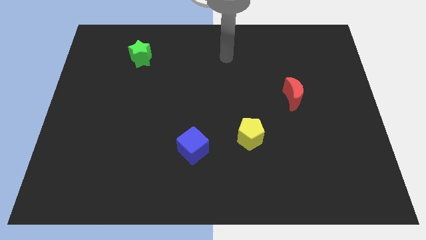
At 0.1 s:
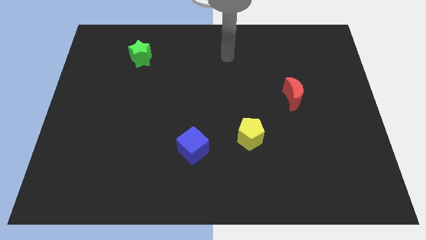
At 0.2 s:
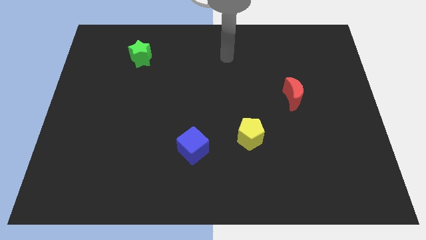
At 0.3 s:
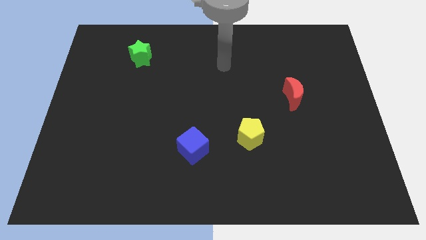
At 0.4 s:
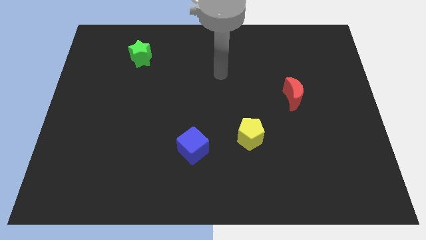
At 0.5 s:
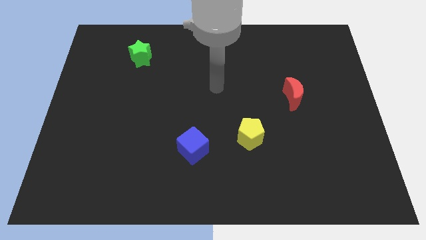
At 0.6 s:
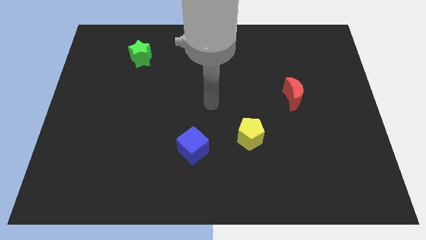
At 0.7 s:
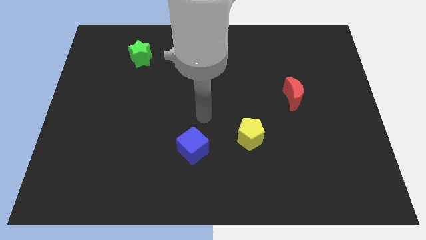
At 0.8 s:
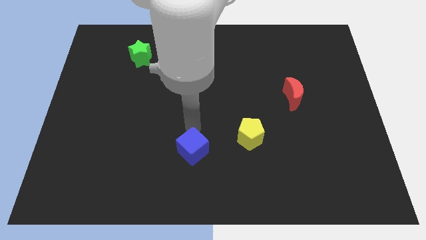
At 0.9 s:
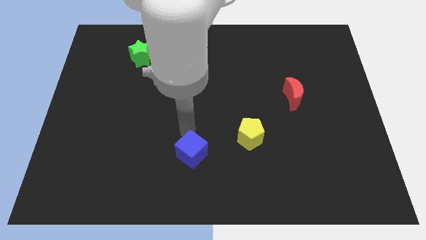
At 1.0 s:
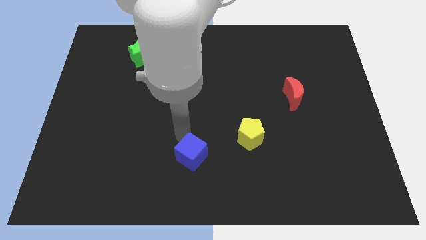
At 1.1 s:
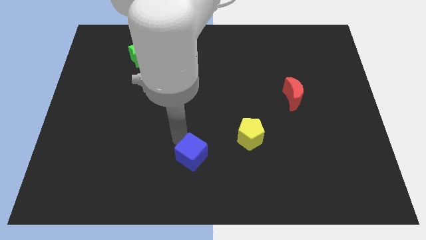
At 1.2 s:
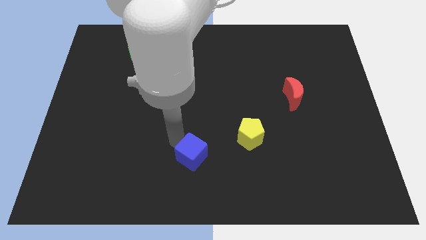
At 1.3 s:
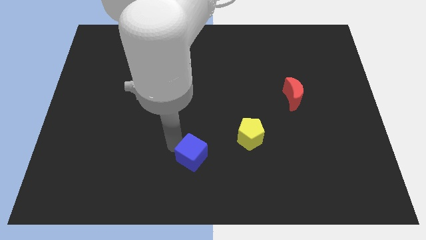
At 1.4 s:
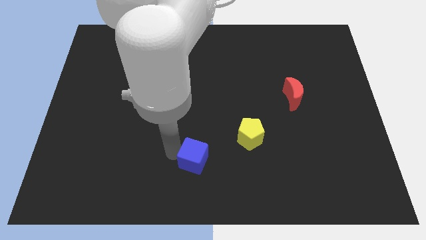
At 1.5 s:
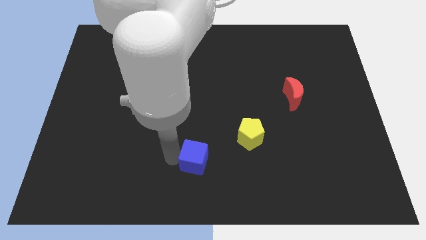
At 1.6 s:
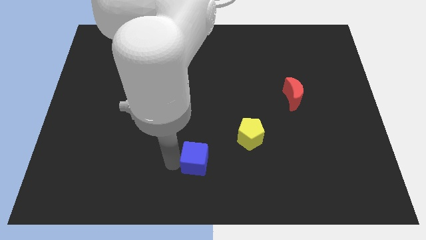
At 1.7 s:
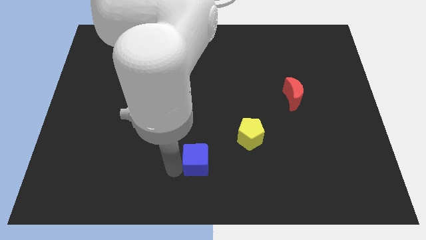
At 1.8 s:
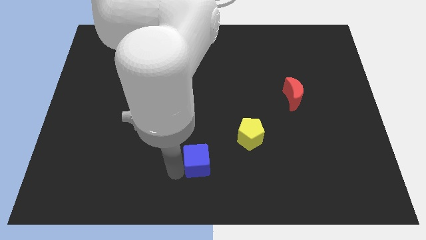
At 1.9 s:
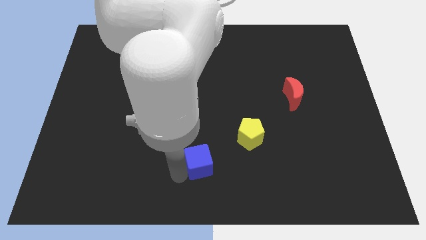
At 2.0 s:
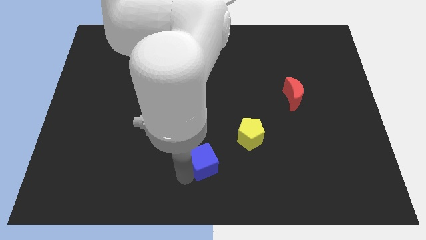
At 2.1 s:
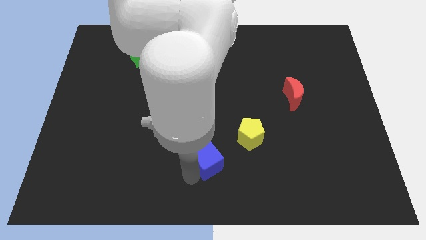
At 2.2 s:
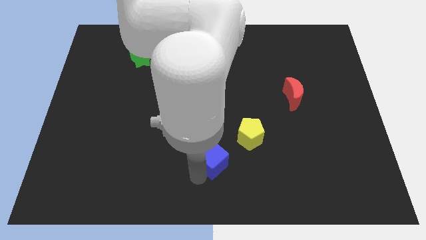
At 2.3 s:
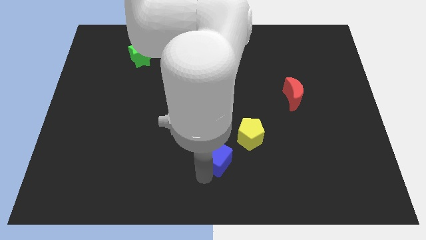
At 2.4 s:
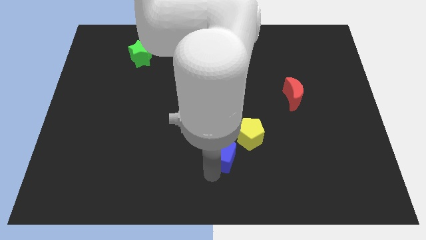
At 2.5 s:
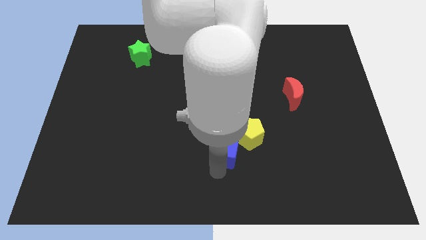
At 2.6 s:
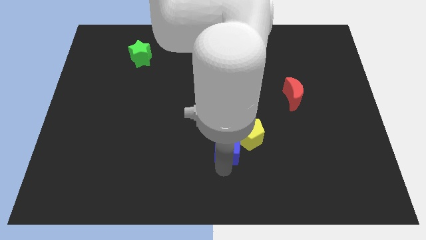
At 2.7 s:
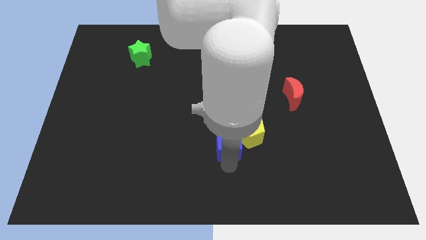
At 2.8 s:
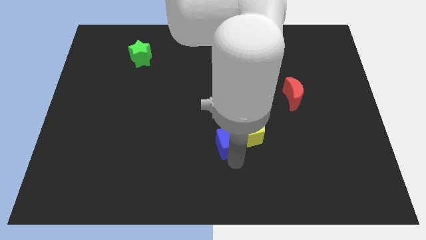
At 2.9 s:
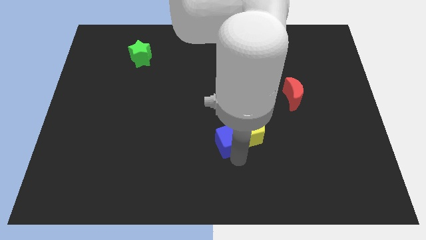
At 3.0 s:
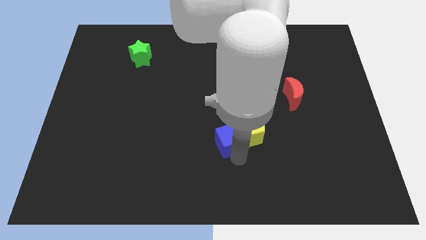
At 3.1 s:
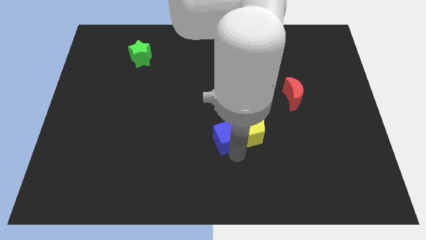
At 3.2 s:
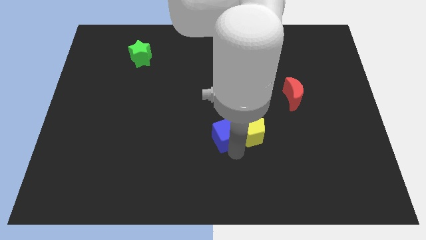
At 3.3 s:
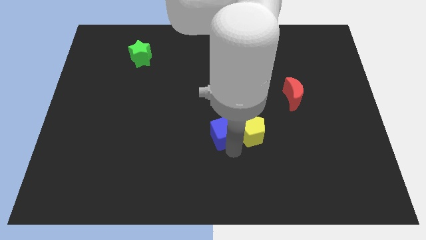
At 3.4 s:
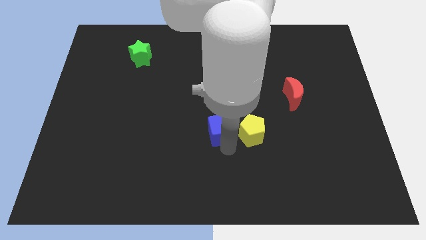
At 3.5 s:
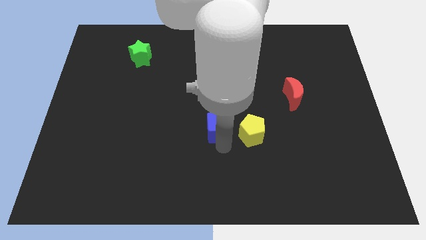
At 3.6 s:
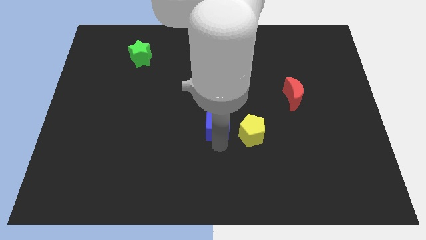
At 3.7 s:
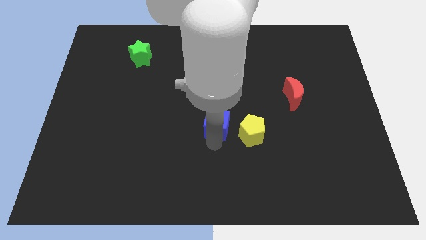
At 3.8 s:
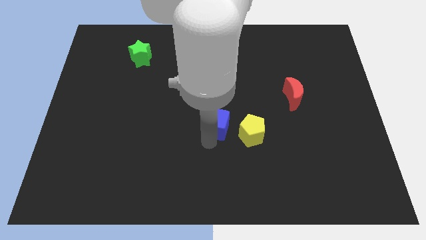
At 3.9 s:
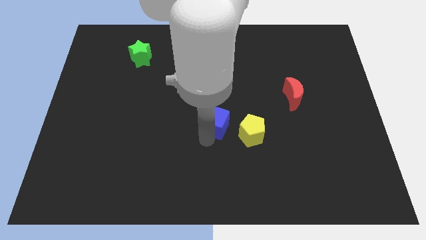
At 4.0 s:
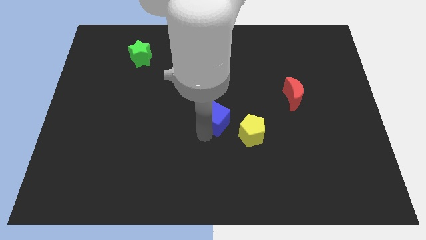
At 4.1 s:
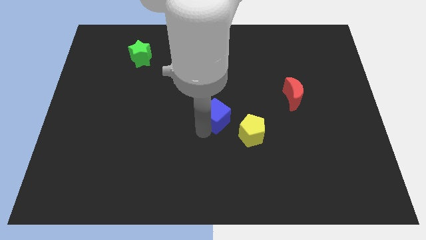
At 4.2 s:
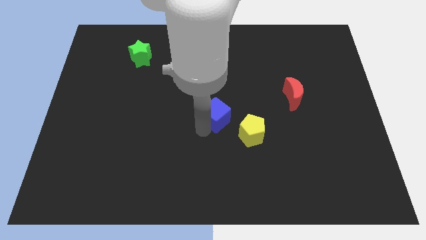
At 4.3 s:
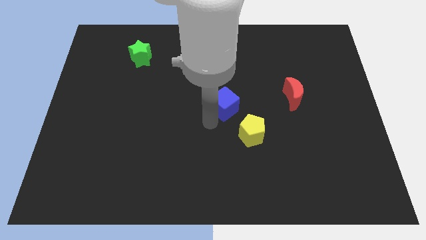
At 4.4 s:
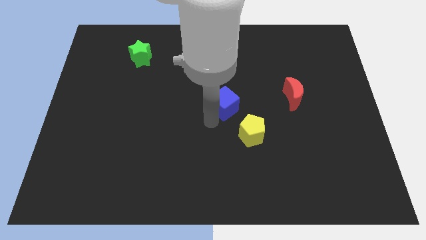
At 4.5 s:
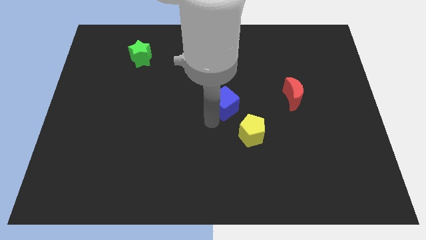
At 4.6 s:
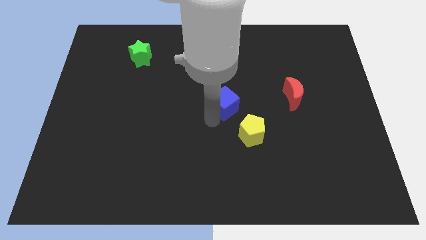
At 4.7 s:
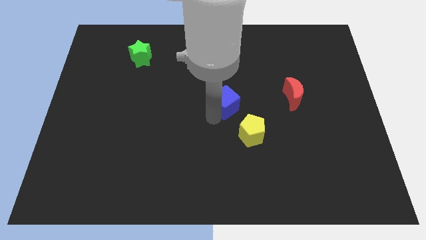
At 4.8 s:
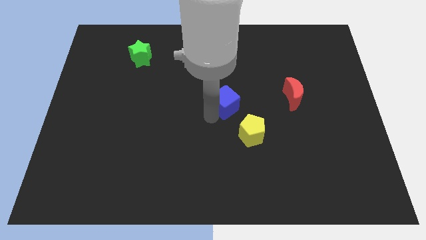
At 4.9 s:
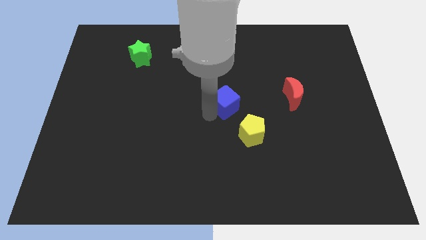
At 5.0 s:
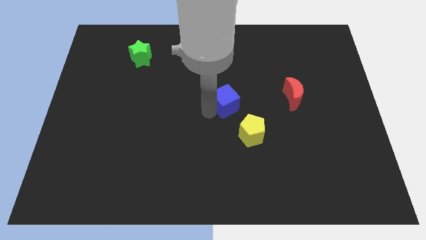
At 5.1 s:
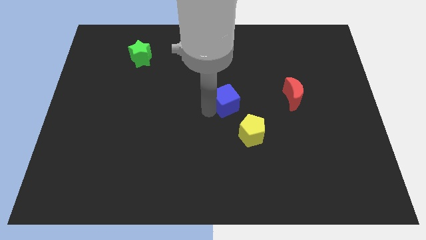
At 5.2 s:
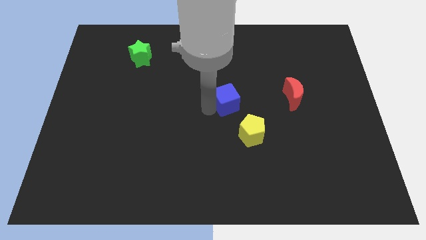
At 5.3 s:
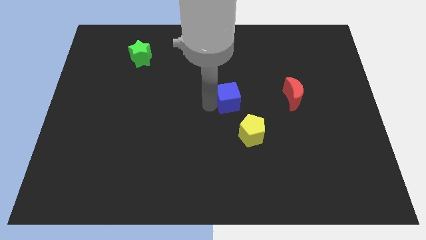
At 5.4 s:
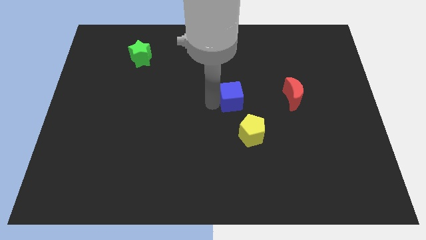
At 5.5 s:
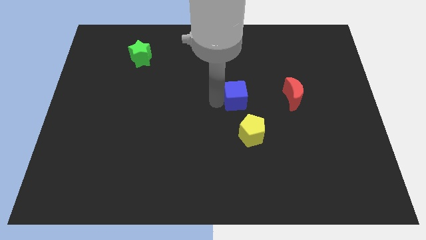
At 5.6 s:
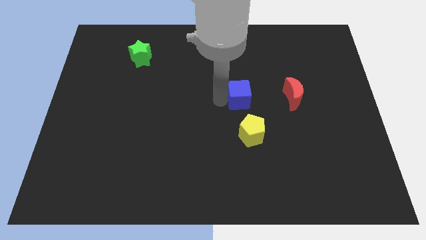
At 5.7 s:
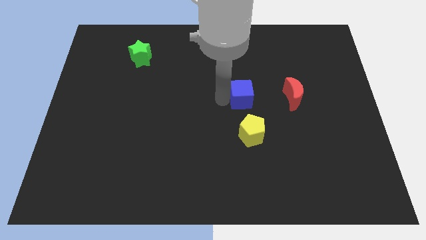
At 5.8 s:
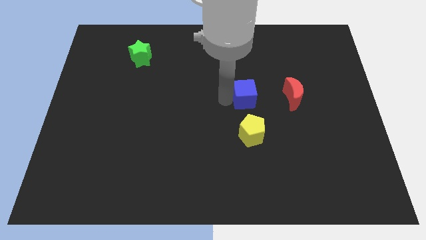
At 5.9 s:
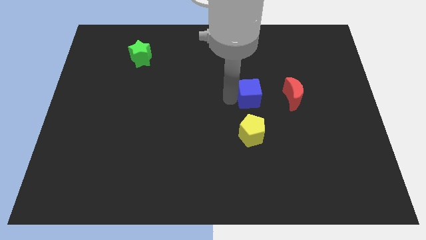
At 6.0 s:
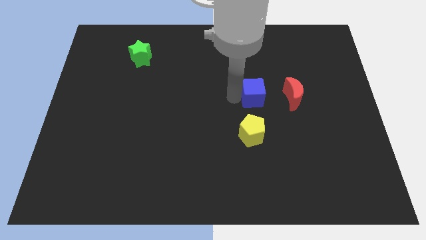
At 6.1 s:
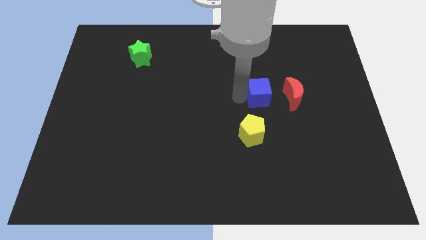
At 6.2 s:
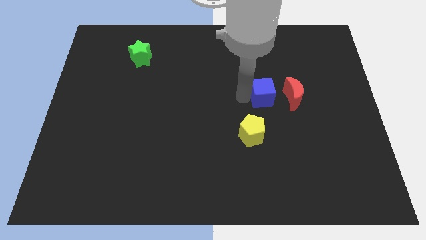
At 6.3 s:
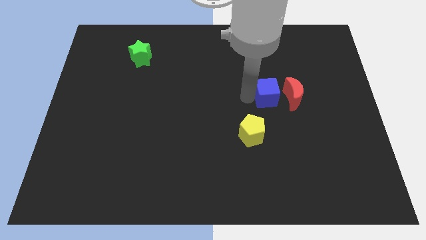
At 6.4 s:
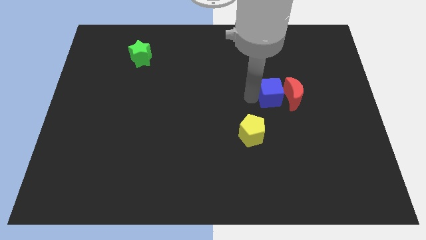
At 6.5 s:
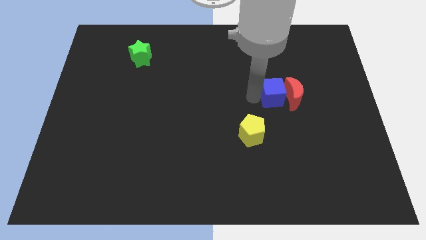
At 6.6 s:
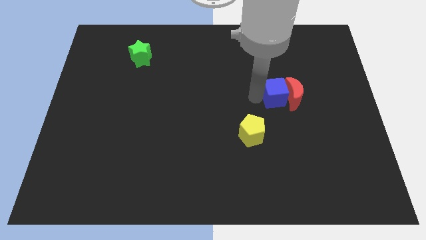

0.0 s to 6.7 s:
move the blue block towards the red moon

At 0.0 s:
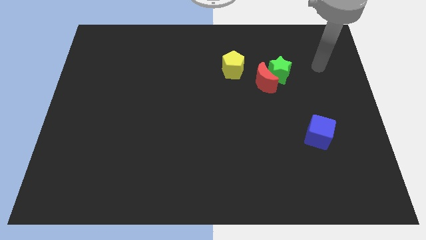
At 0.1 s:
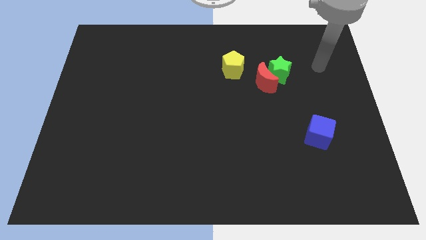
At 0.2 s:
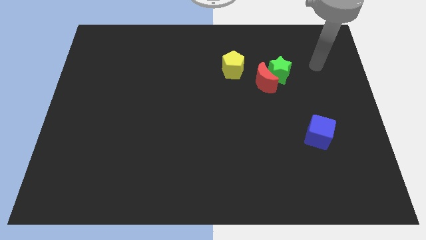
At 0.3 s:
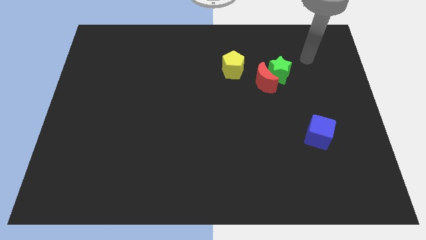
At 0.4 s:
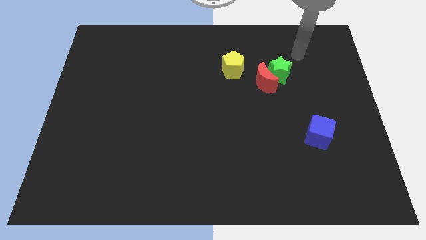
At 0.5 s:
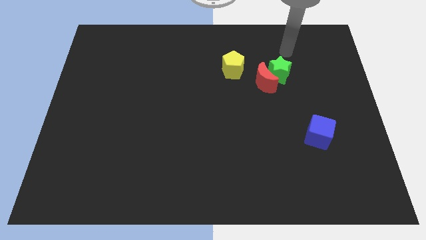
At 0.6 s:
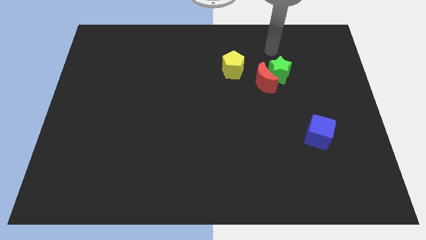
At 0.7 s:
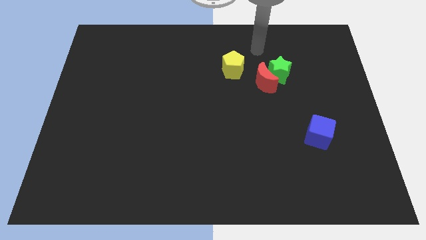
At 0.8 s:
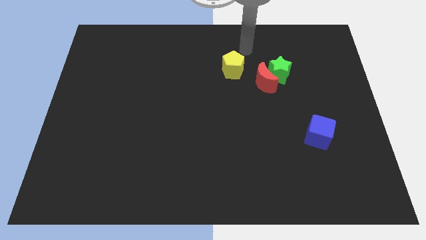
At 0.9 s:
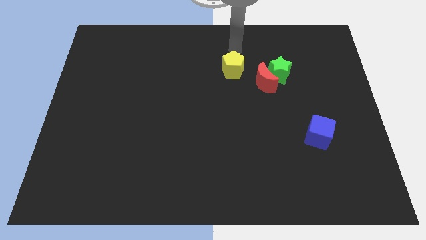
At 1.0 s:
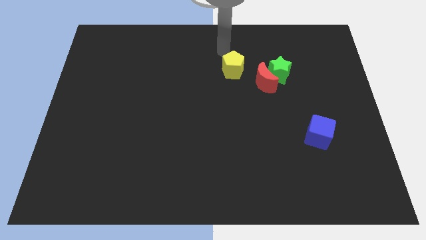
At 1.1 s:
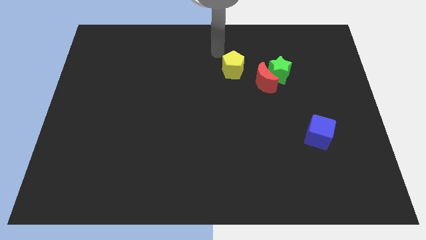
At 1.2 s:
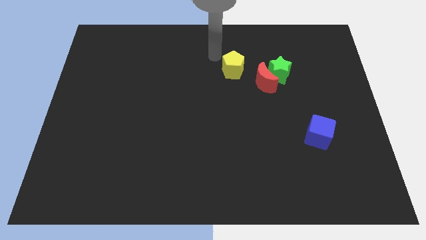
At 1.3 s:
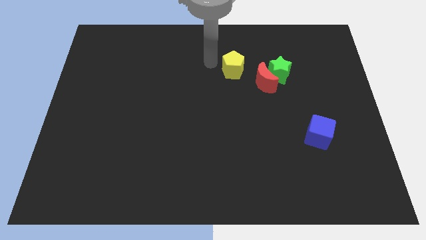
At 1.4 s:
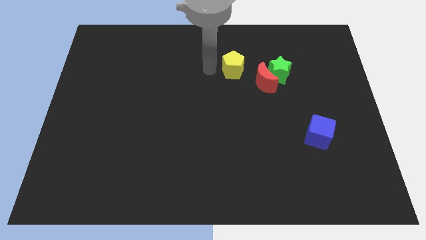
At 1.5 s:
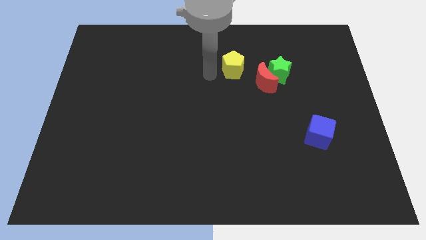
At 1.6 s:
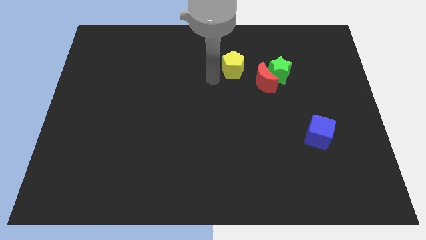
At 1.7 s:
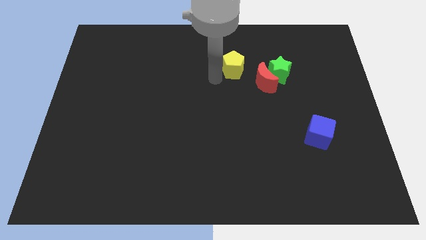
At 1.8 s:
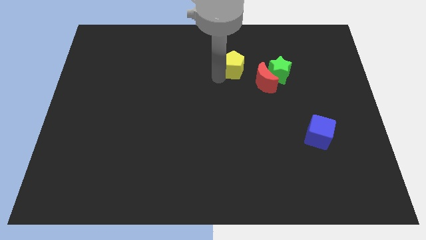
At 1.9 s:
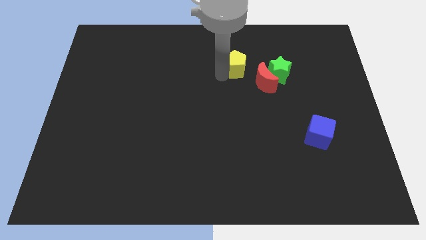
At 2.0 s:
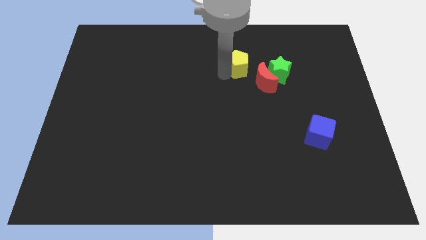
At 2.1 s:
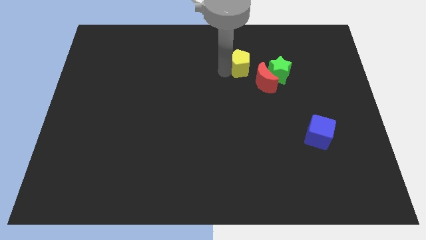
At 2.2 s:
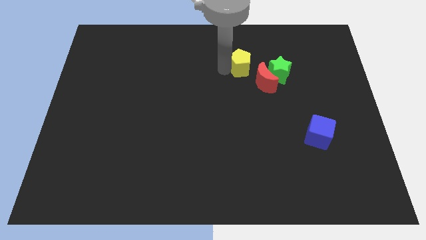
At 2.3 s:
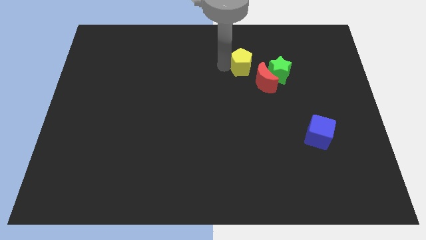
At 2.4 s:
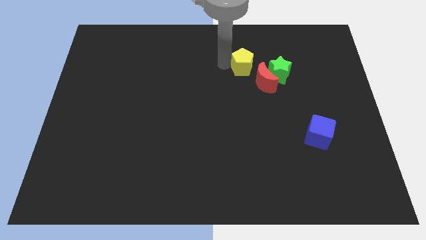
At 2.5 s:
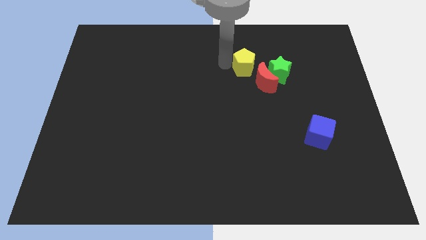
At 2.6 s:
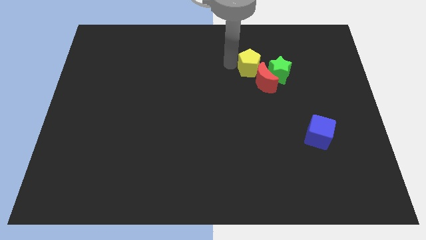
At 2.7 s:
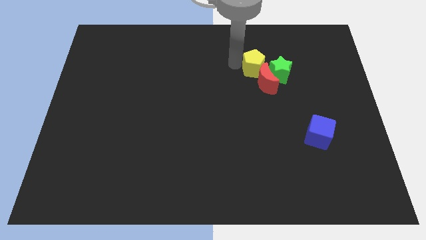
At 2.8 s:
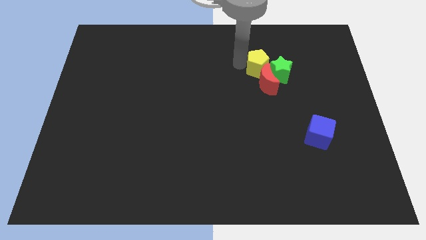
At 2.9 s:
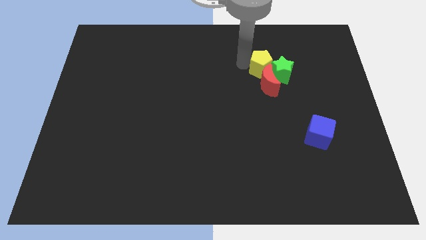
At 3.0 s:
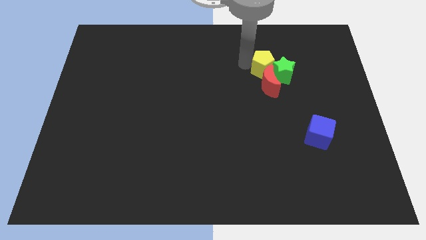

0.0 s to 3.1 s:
put the yellow pentagon next to the star
